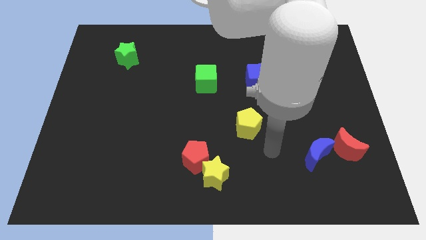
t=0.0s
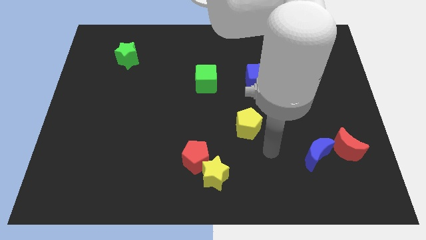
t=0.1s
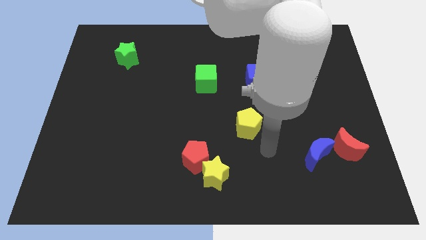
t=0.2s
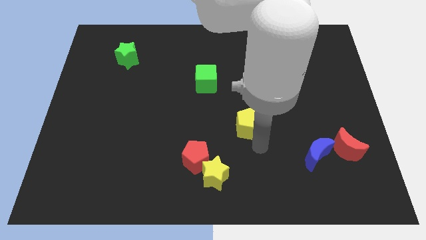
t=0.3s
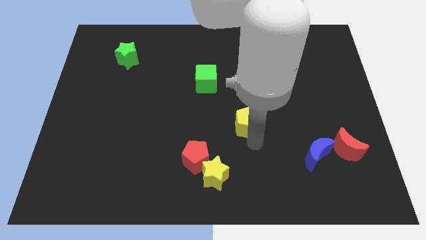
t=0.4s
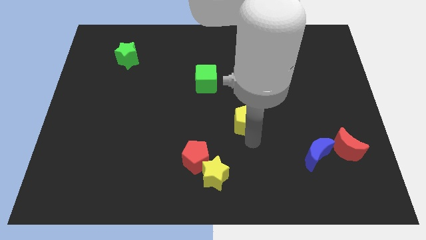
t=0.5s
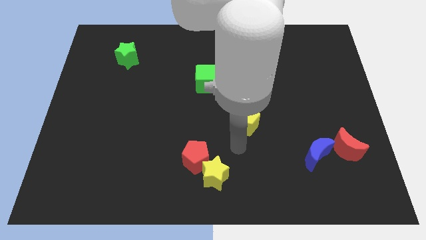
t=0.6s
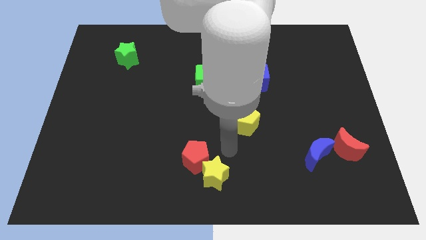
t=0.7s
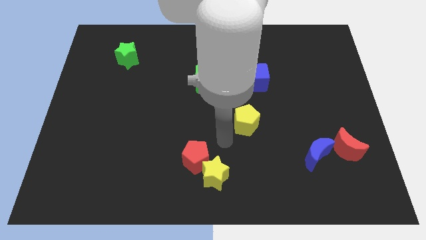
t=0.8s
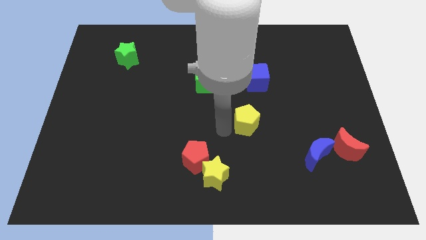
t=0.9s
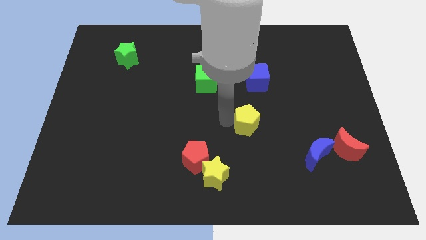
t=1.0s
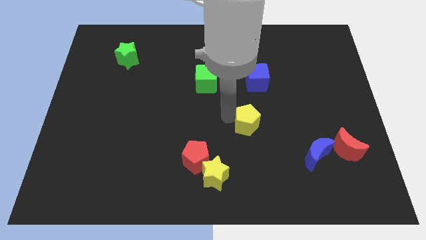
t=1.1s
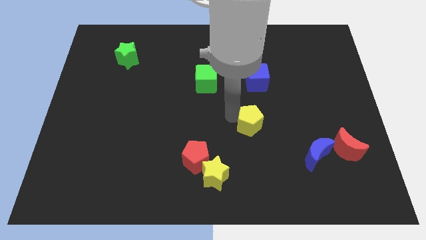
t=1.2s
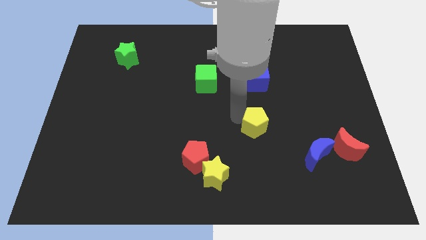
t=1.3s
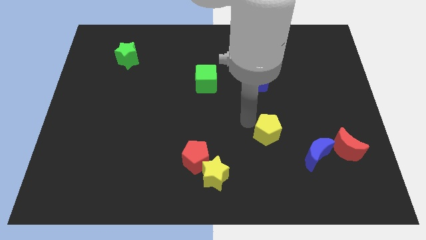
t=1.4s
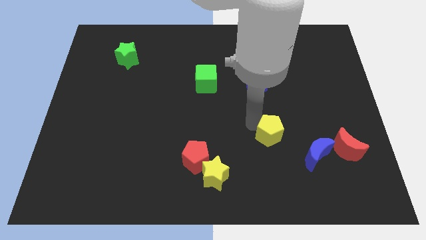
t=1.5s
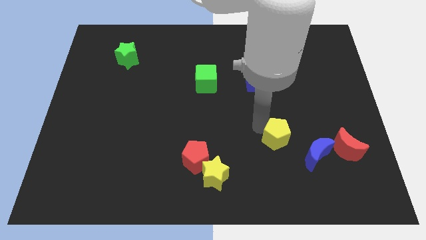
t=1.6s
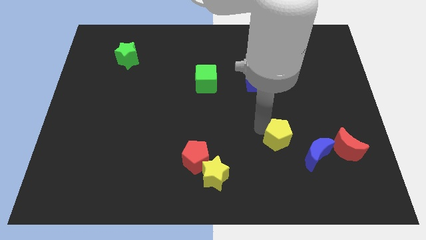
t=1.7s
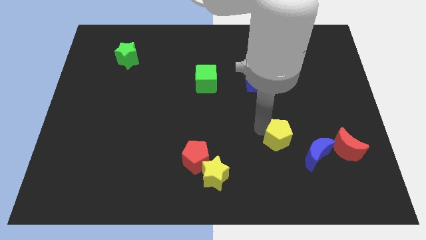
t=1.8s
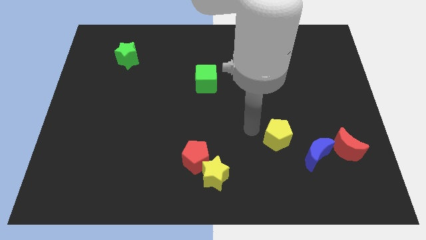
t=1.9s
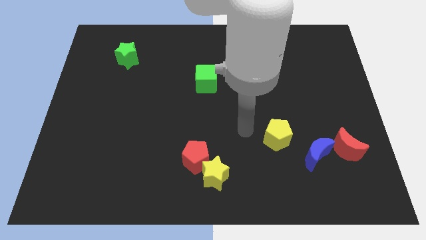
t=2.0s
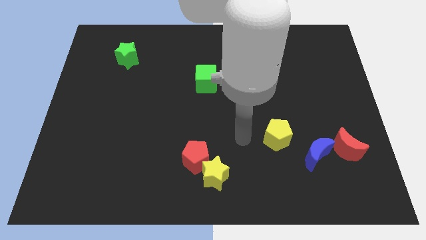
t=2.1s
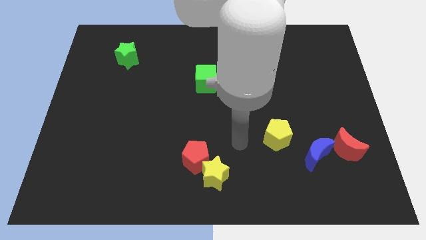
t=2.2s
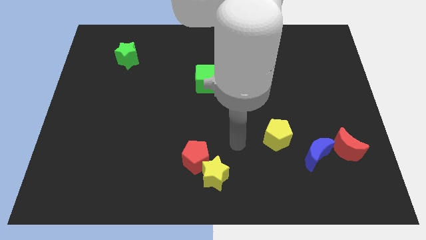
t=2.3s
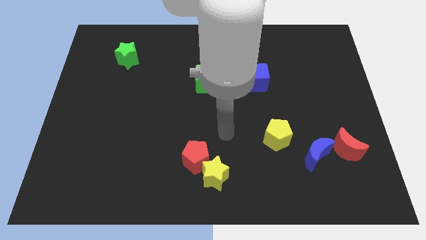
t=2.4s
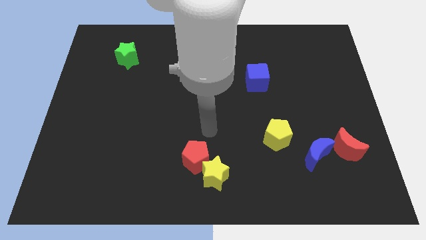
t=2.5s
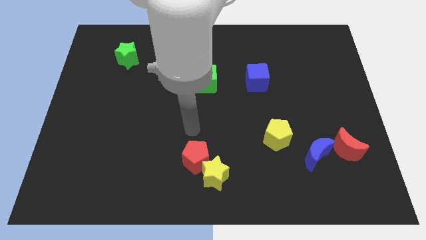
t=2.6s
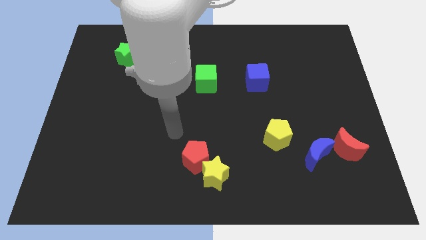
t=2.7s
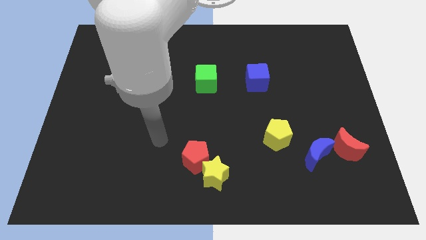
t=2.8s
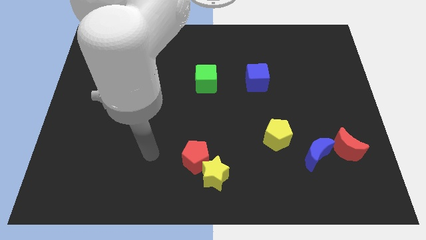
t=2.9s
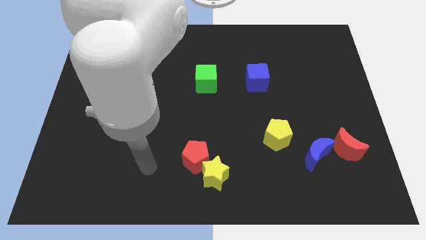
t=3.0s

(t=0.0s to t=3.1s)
move your arm to the left side of the red pentagon

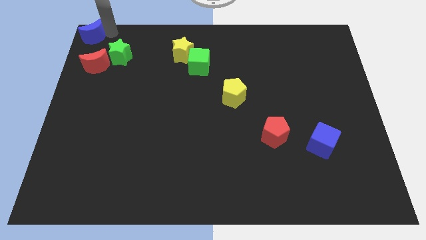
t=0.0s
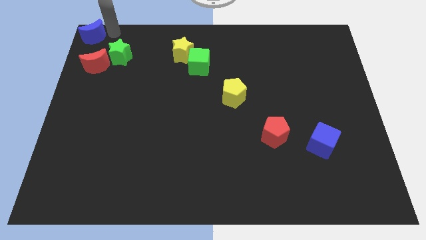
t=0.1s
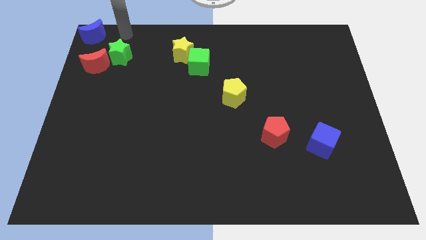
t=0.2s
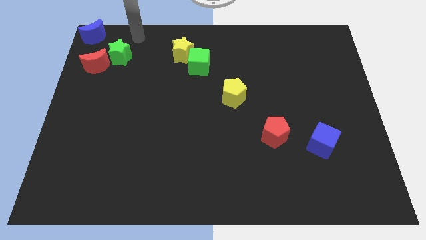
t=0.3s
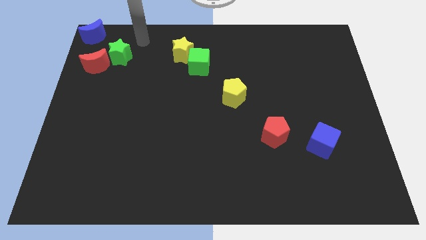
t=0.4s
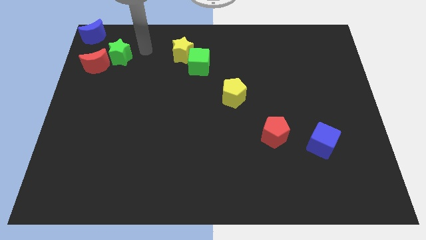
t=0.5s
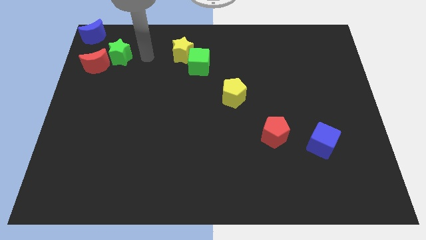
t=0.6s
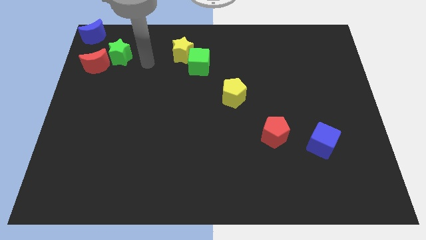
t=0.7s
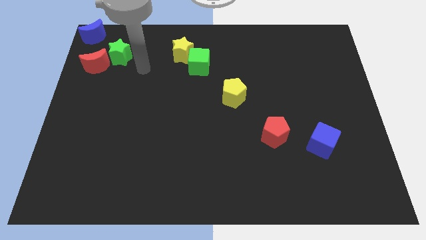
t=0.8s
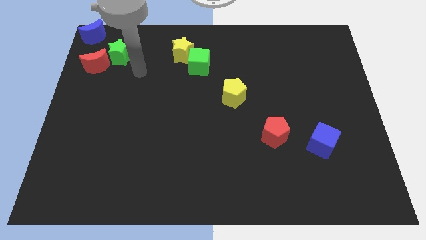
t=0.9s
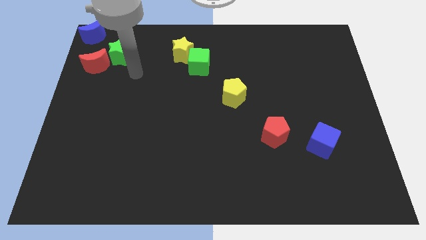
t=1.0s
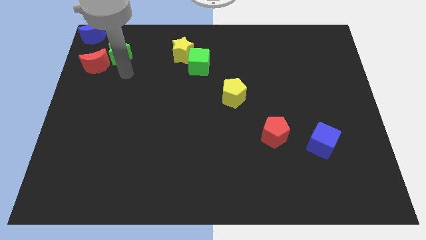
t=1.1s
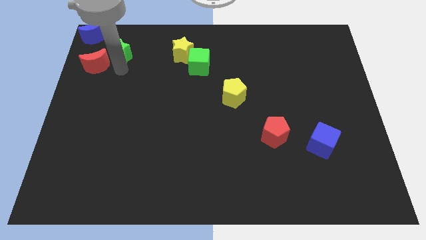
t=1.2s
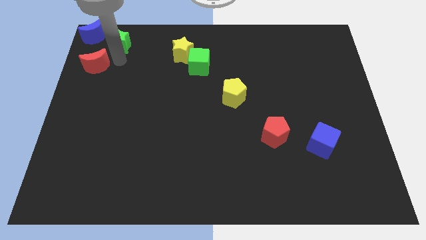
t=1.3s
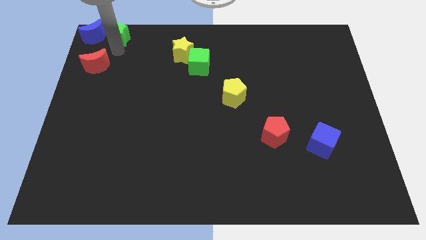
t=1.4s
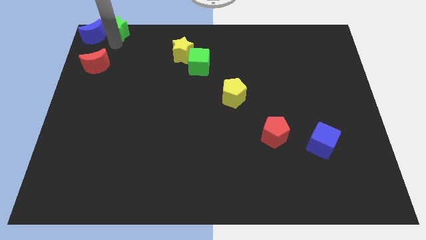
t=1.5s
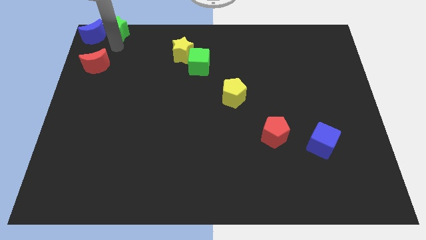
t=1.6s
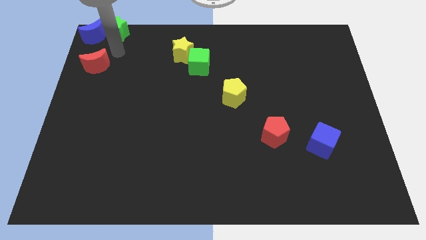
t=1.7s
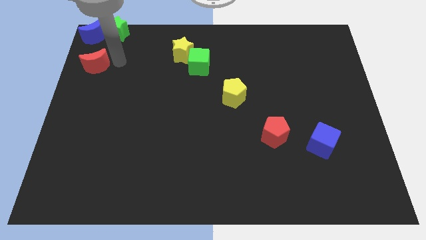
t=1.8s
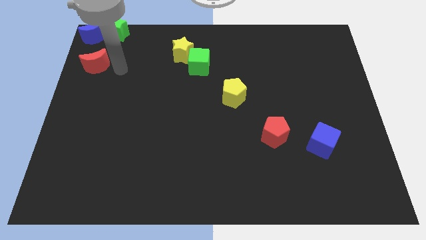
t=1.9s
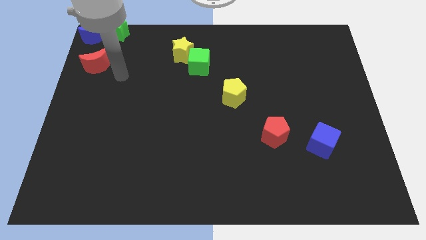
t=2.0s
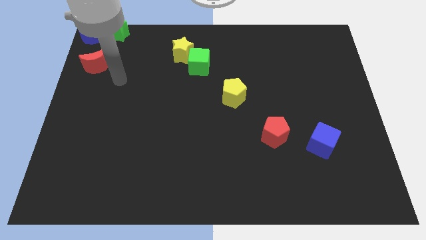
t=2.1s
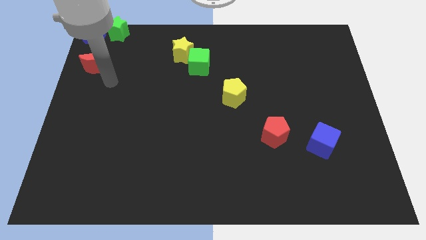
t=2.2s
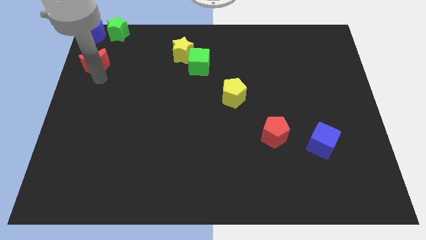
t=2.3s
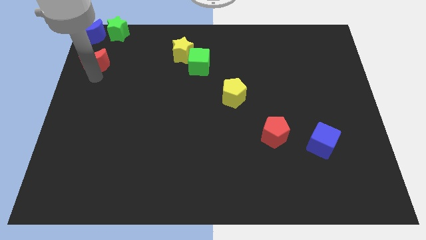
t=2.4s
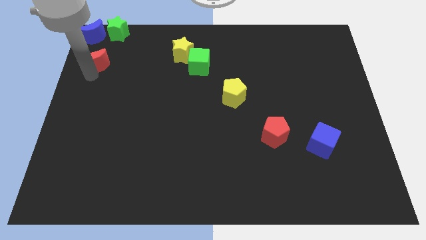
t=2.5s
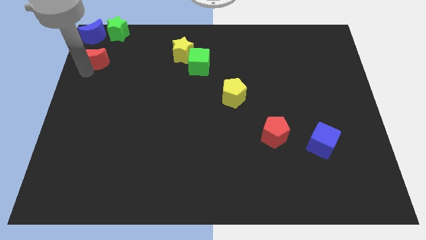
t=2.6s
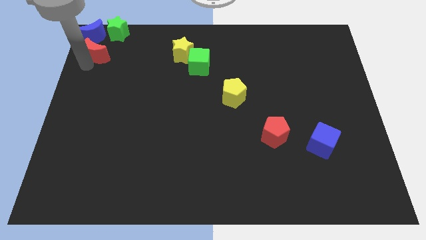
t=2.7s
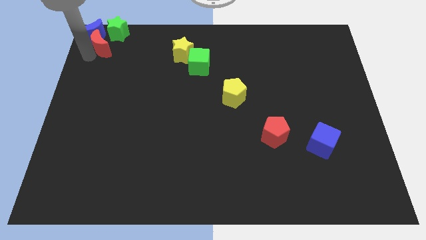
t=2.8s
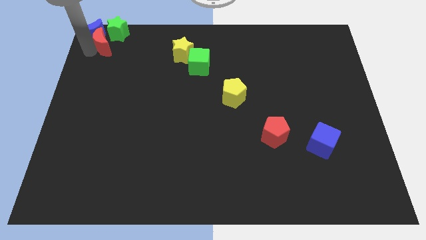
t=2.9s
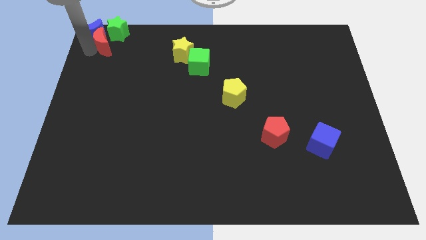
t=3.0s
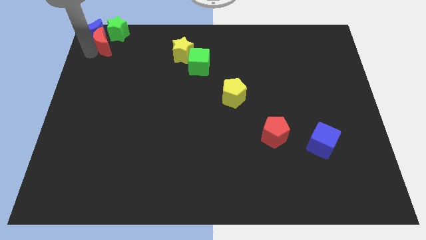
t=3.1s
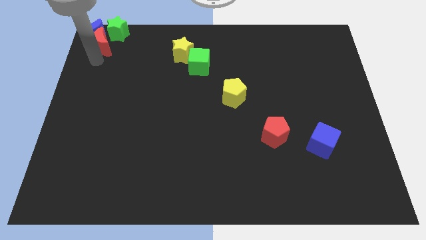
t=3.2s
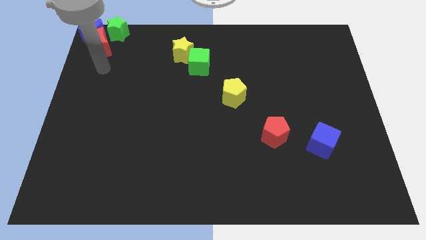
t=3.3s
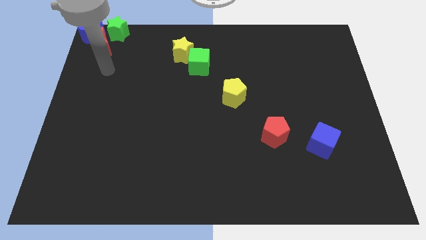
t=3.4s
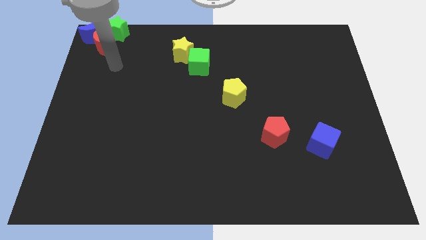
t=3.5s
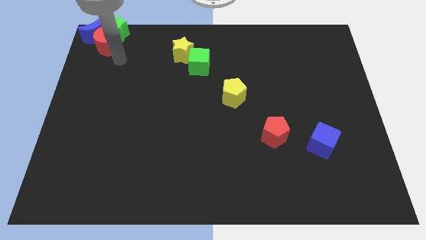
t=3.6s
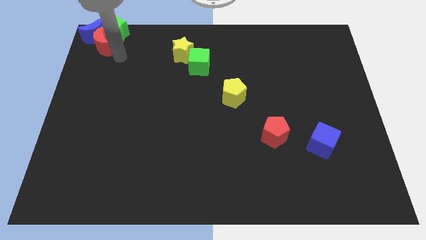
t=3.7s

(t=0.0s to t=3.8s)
push the green cube right to the blue crescent

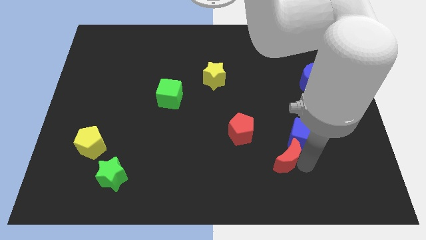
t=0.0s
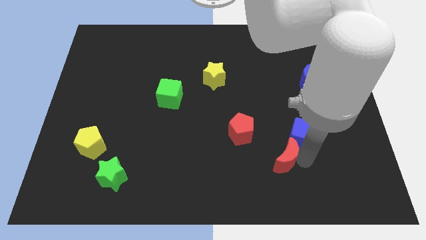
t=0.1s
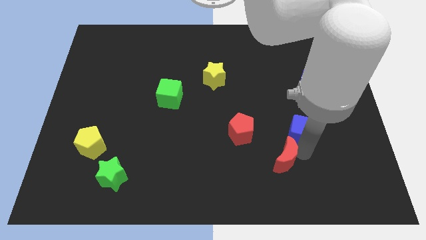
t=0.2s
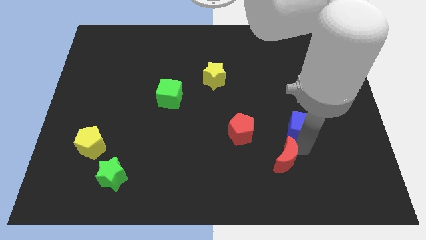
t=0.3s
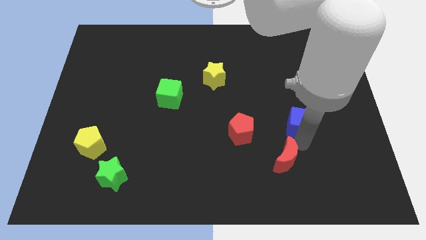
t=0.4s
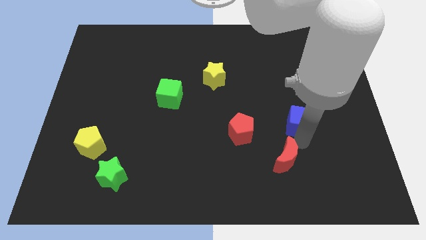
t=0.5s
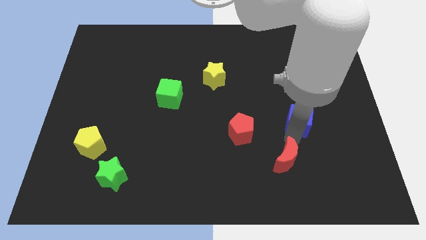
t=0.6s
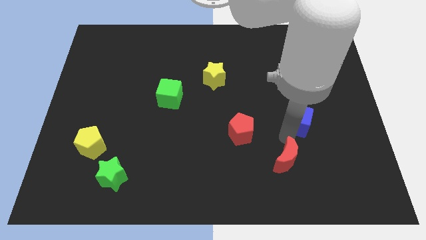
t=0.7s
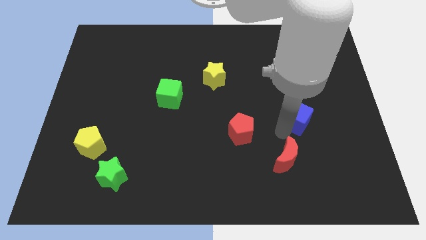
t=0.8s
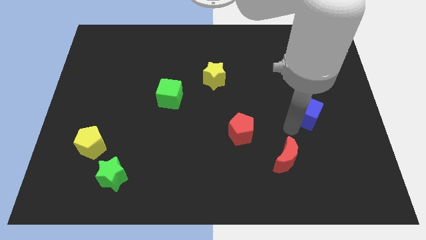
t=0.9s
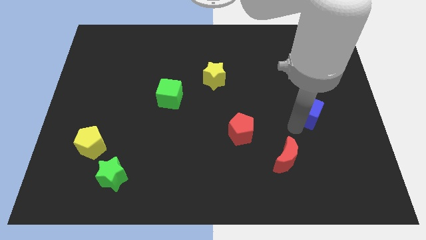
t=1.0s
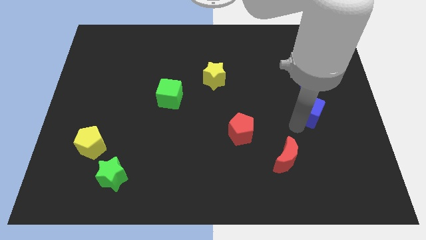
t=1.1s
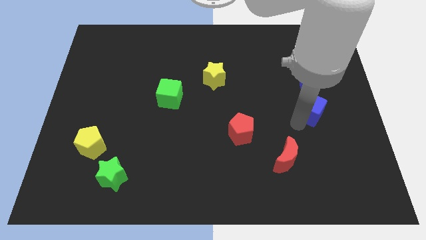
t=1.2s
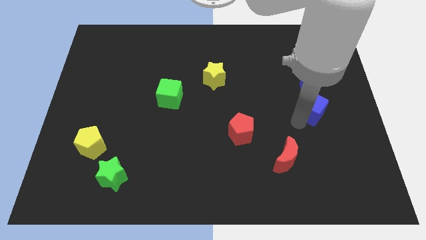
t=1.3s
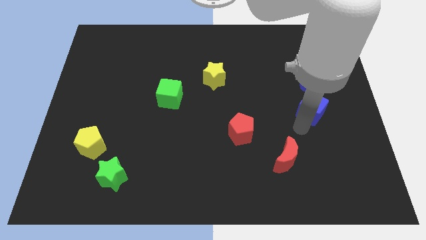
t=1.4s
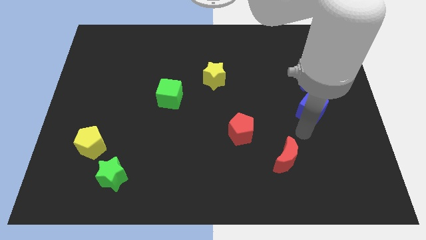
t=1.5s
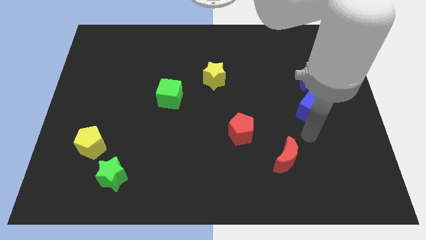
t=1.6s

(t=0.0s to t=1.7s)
separate the blue cube from the red crescent

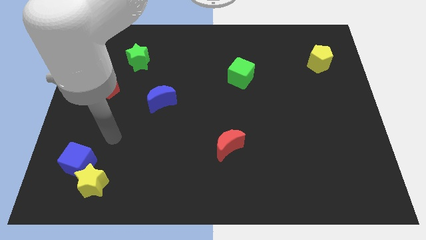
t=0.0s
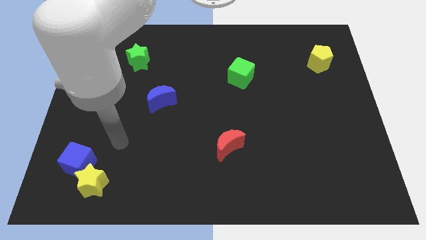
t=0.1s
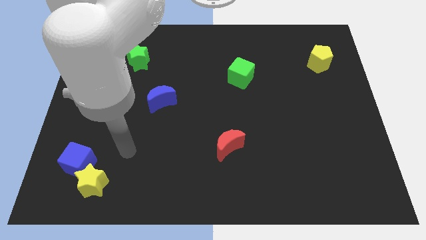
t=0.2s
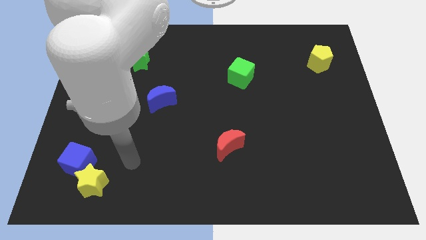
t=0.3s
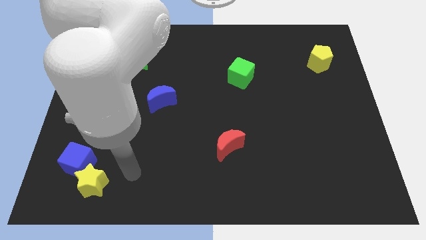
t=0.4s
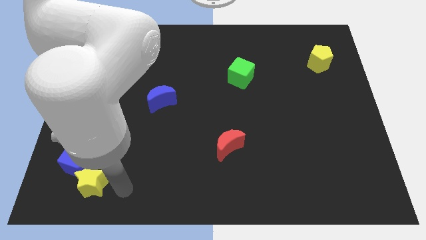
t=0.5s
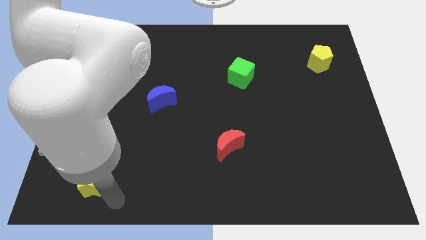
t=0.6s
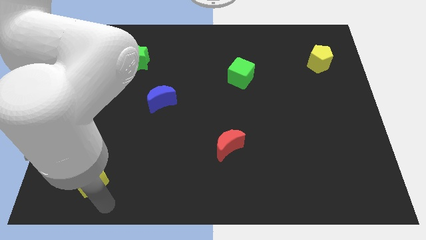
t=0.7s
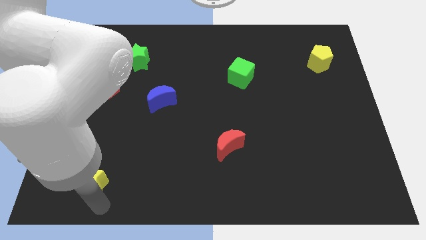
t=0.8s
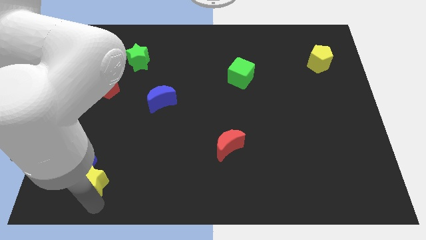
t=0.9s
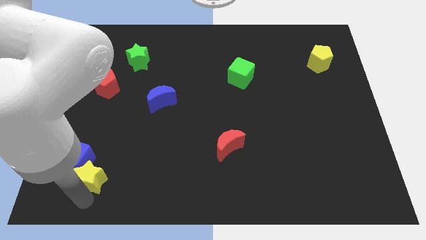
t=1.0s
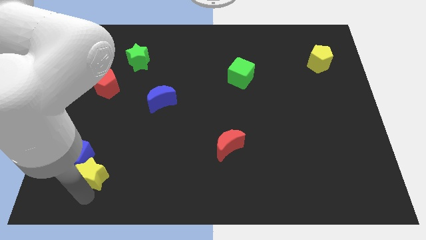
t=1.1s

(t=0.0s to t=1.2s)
touch the bottom of yellow star
